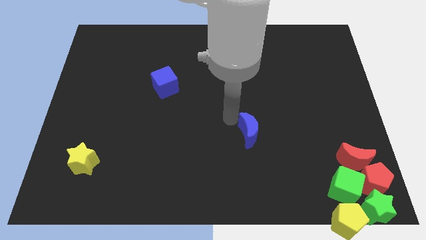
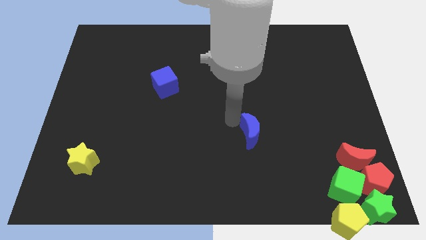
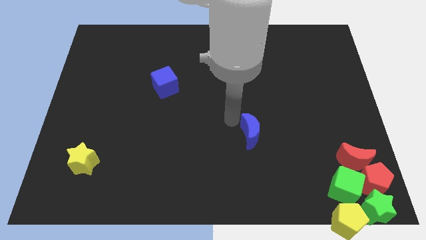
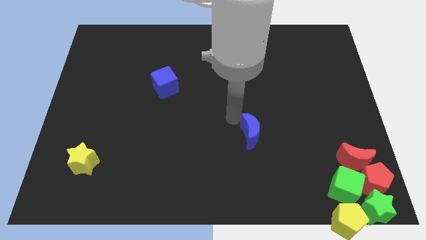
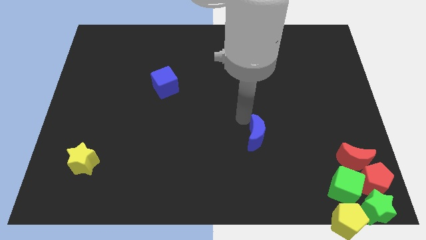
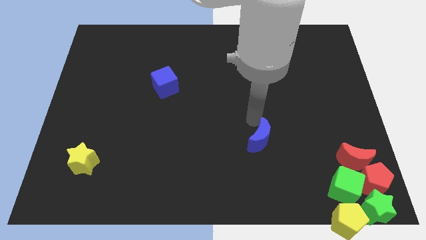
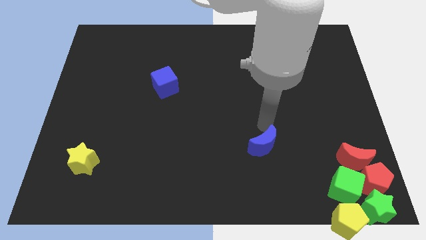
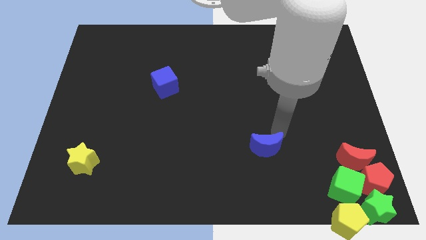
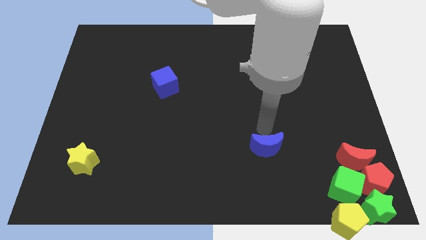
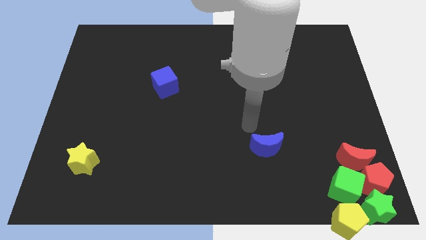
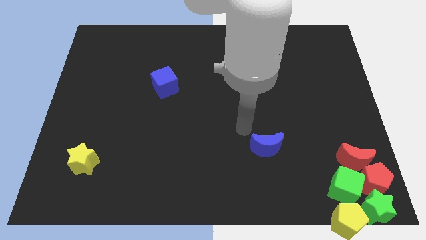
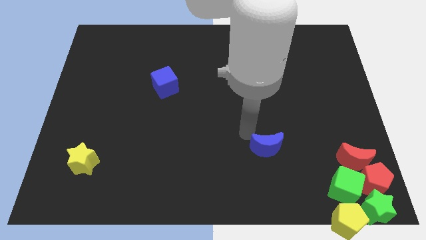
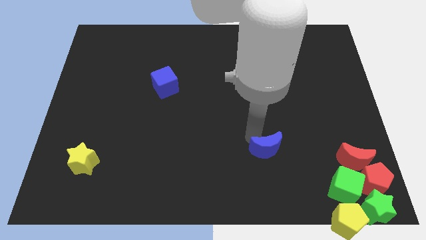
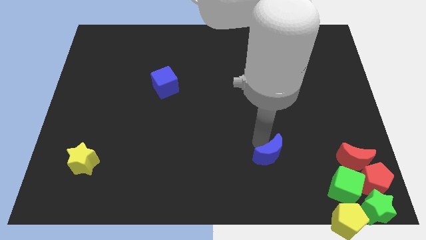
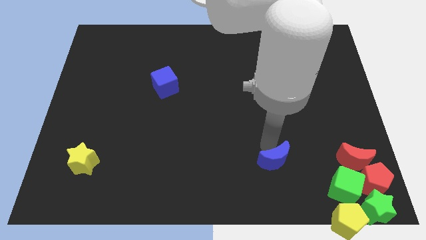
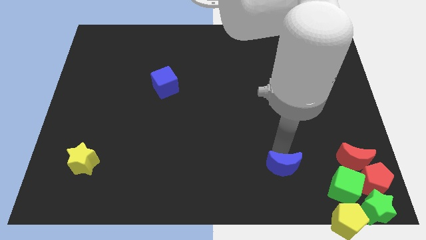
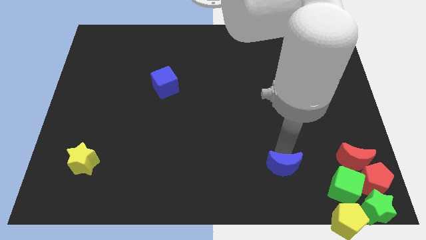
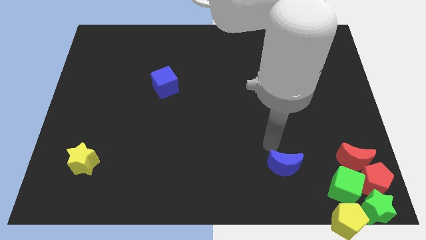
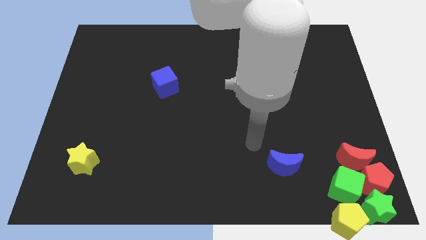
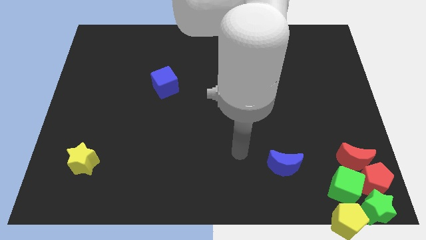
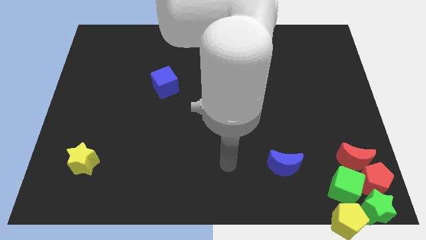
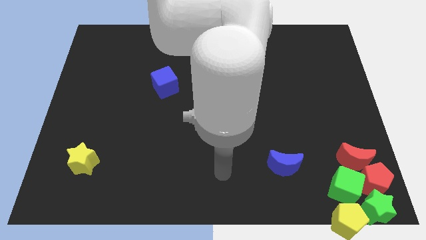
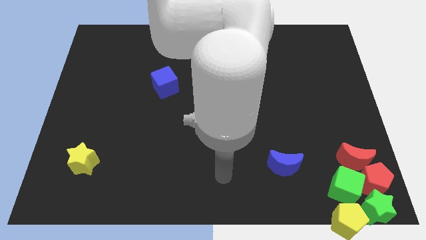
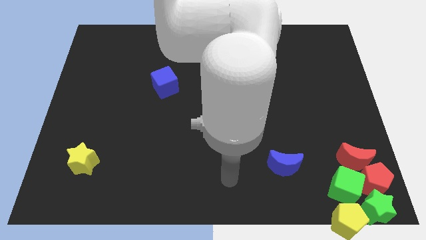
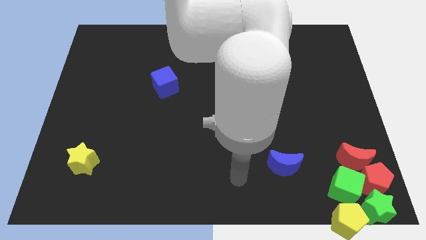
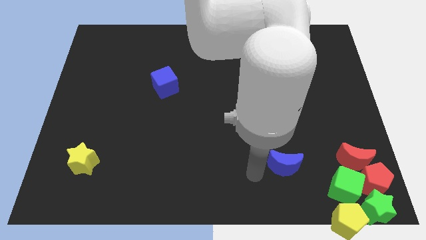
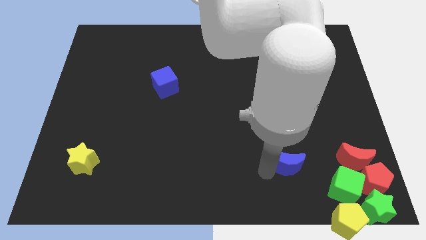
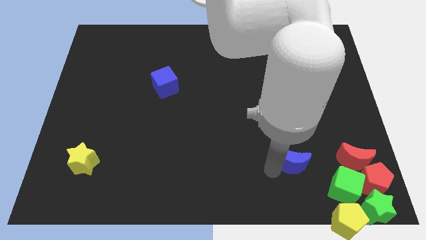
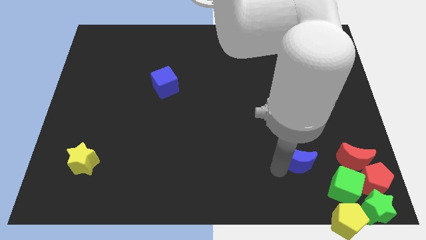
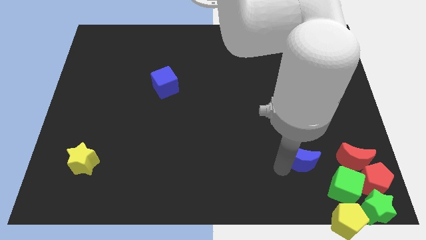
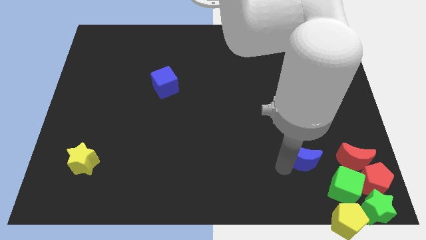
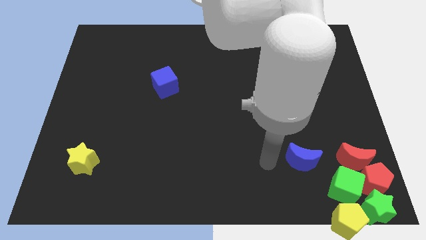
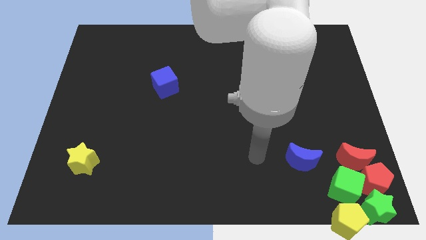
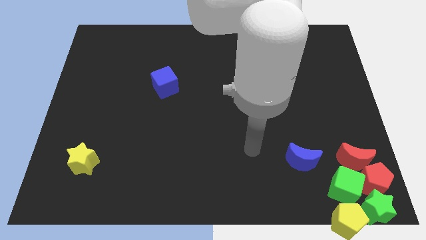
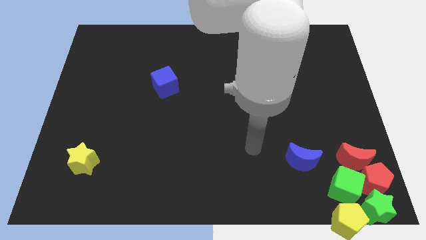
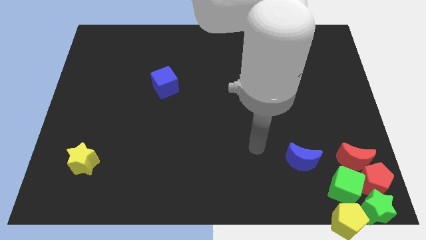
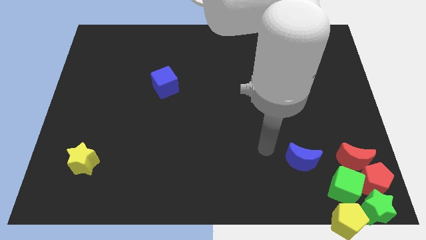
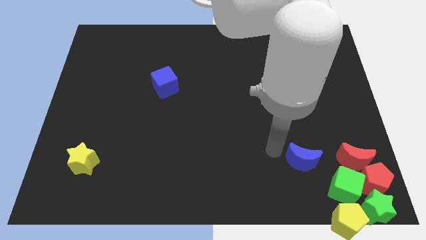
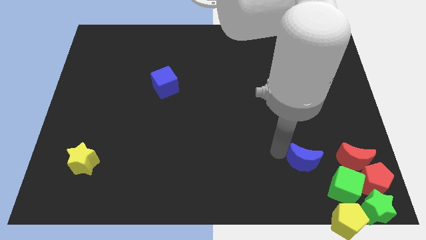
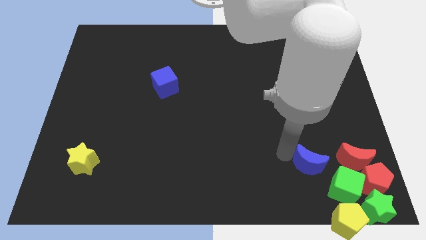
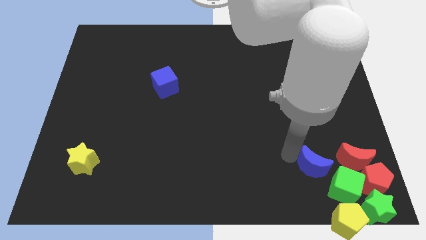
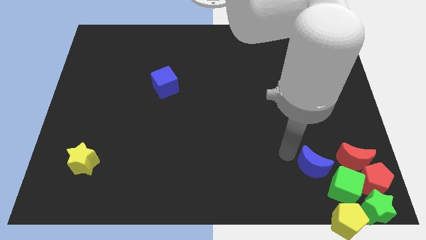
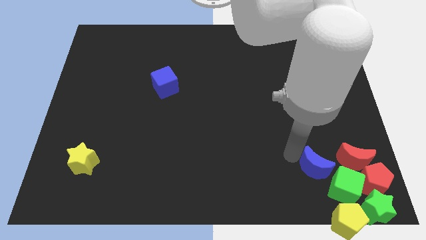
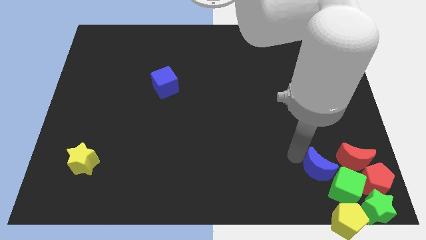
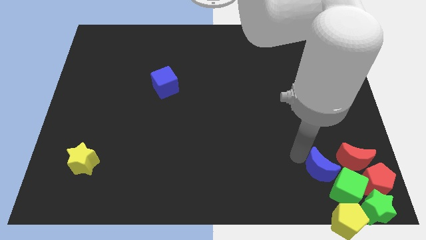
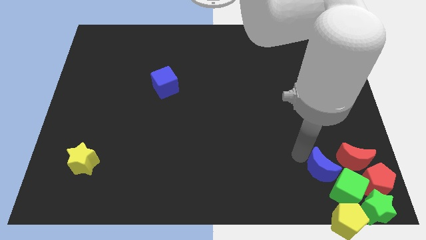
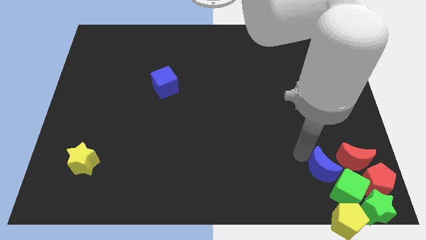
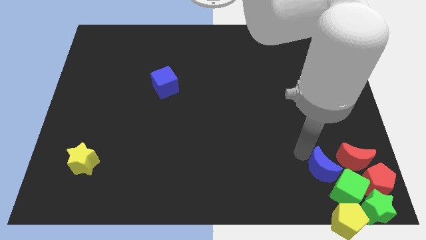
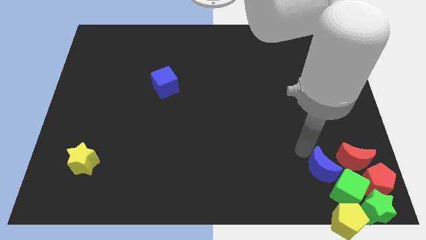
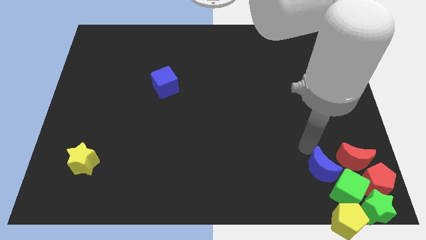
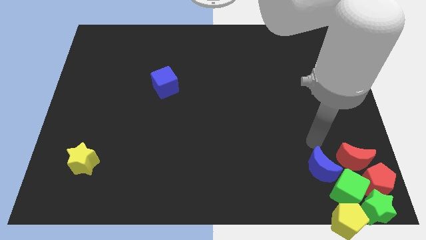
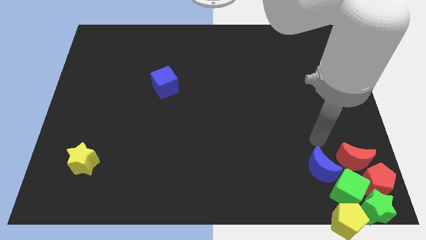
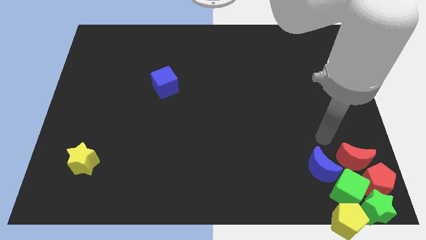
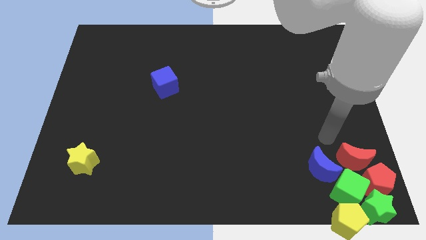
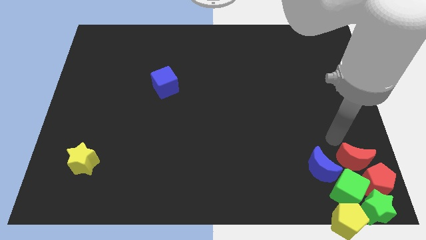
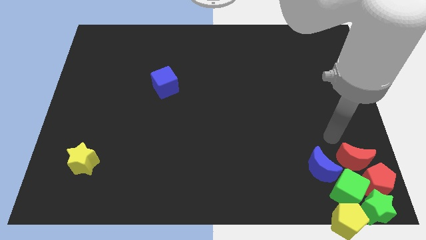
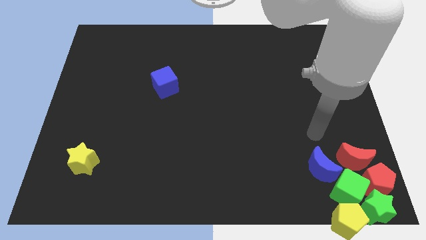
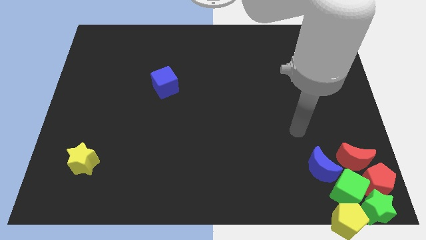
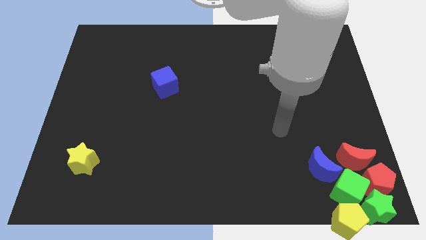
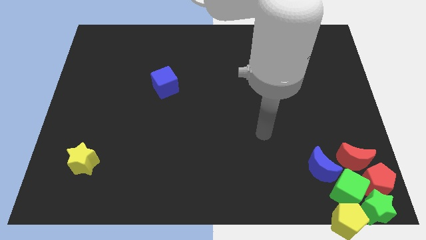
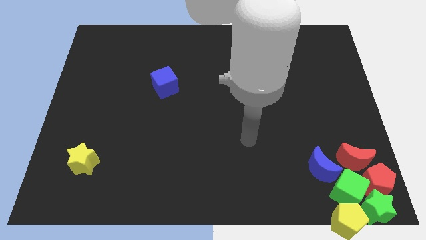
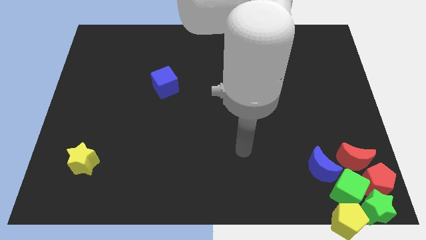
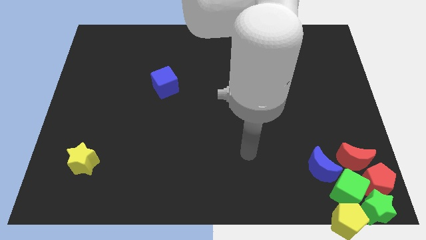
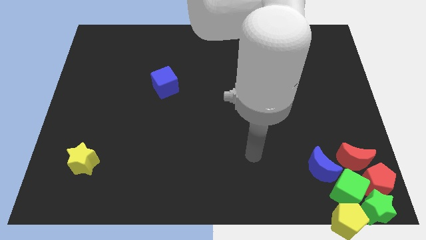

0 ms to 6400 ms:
move the blue crescent to the group of blocks

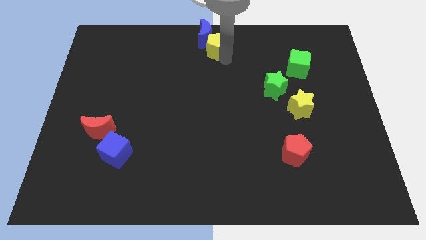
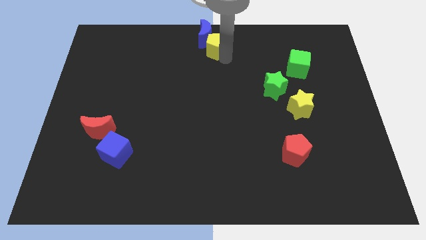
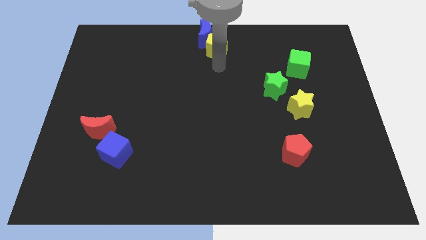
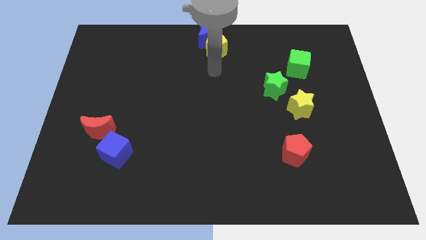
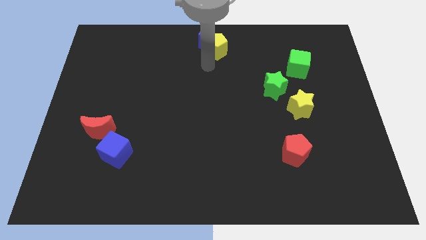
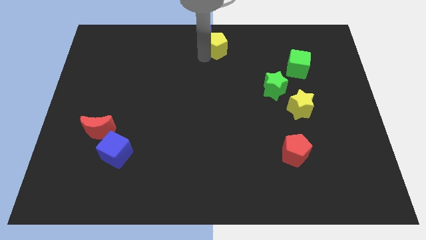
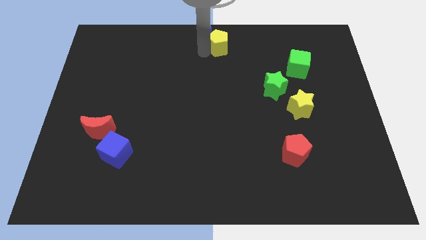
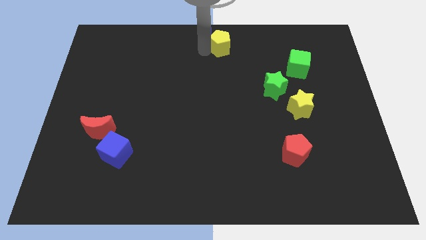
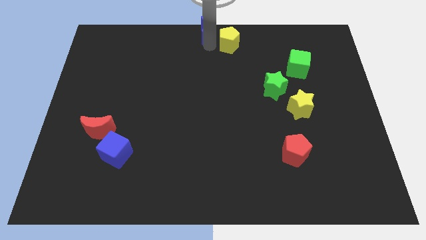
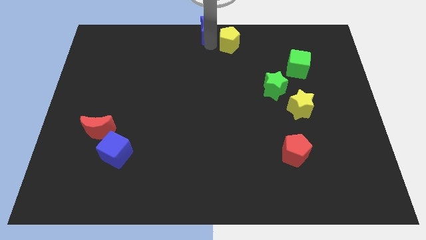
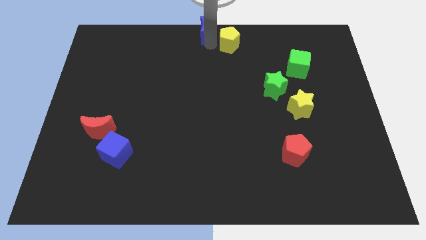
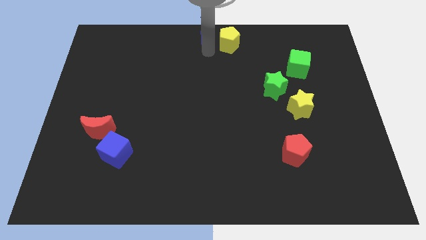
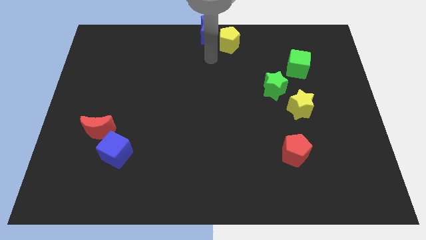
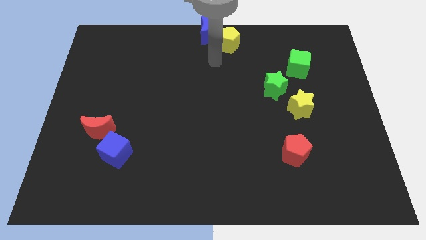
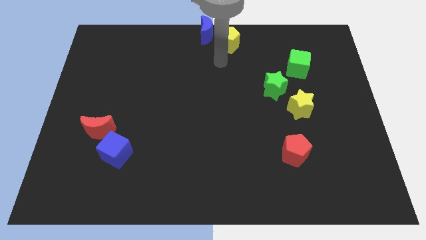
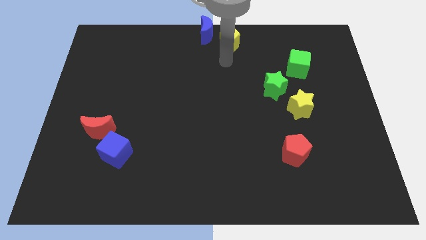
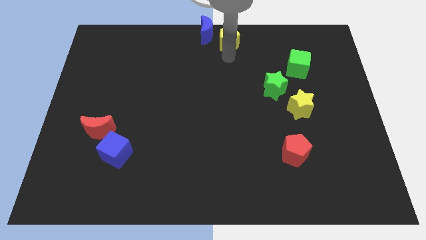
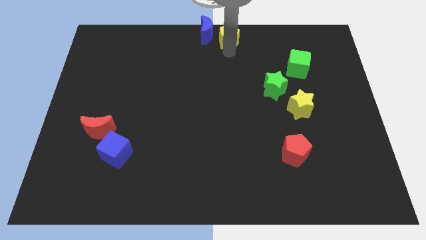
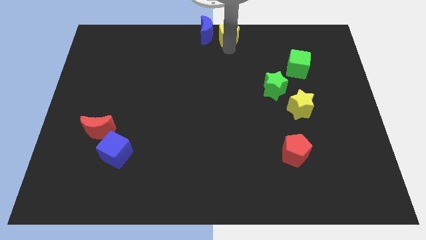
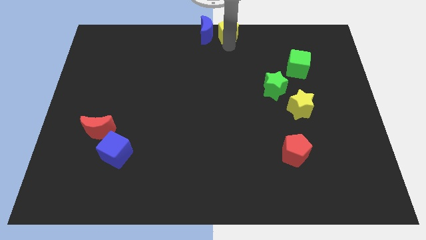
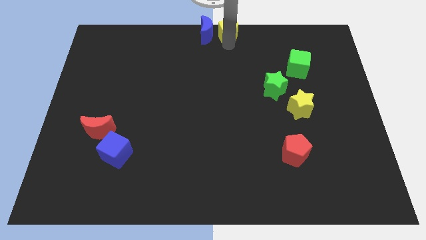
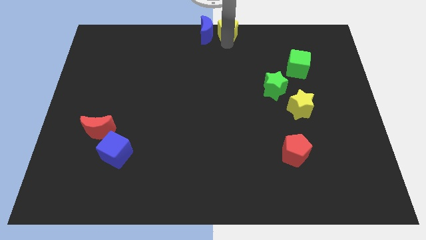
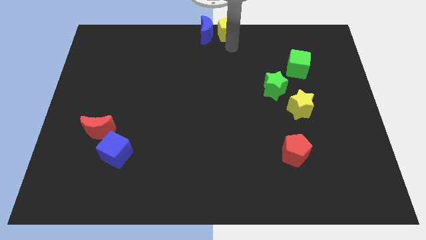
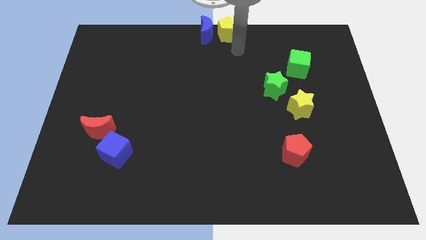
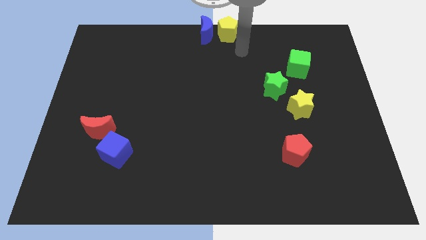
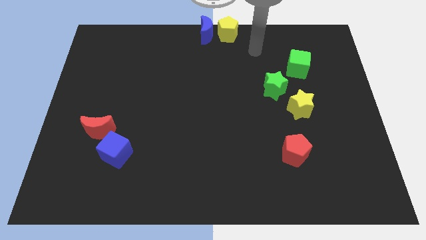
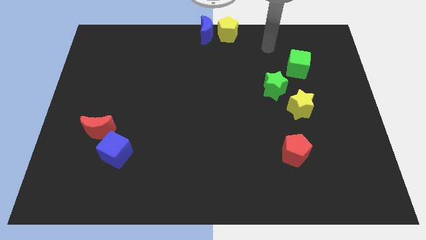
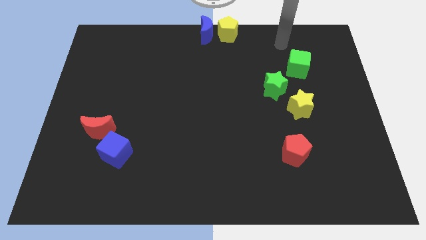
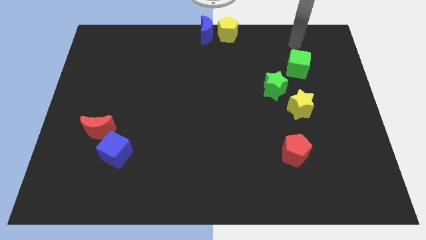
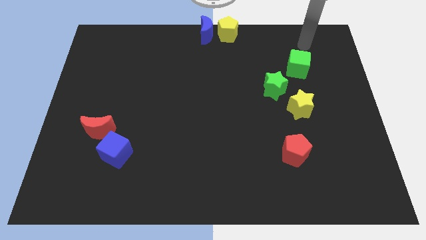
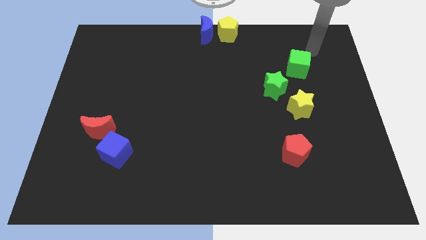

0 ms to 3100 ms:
slide yellow pentagon to center top
